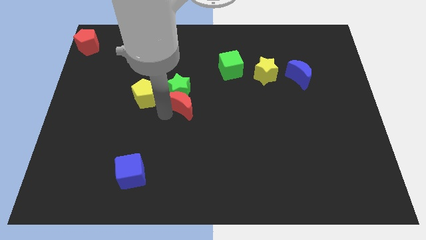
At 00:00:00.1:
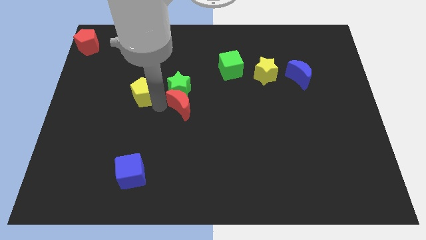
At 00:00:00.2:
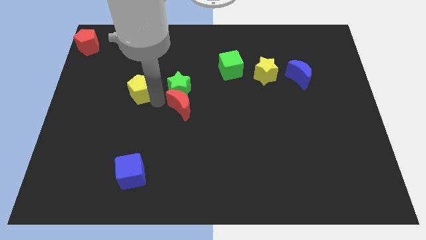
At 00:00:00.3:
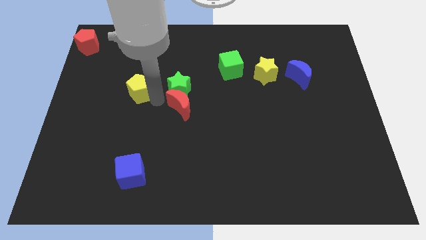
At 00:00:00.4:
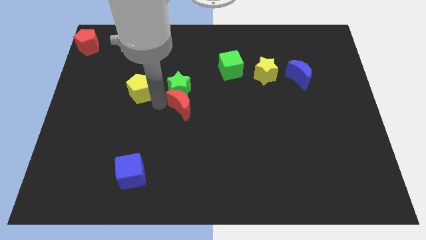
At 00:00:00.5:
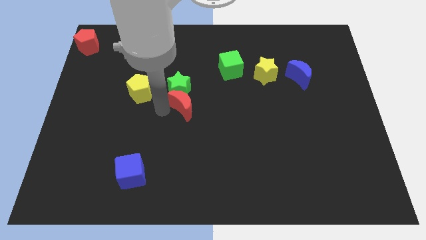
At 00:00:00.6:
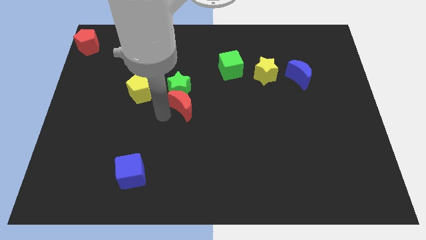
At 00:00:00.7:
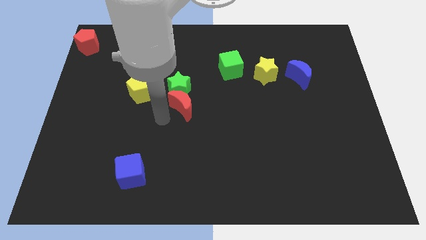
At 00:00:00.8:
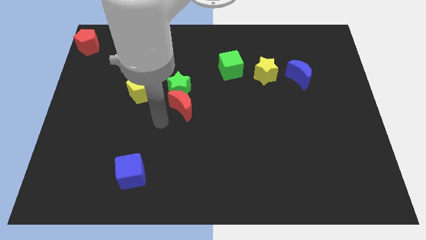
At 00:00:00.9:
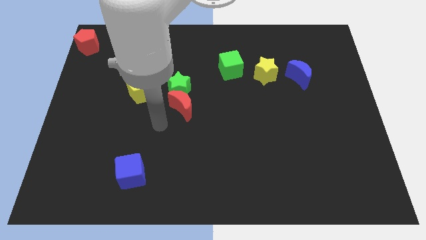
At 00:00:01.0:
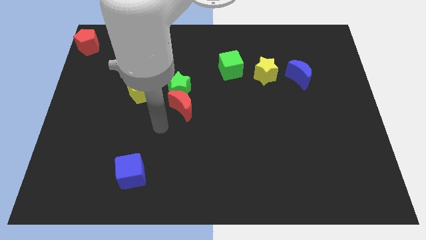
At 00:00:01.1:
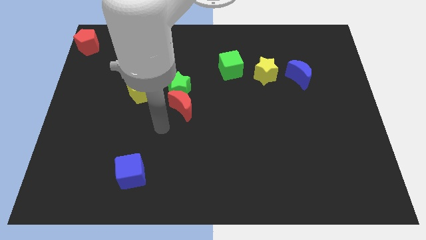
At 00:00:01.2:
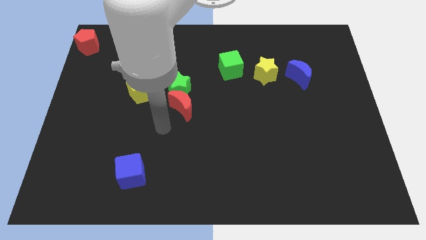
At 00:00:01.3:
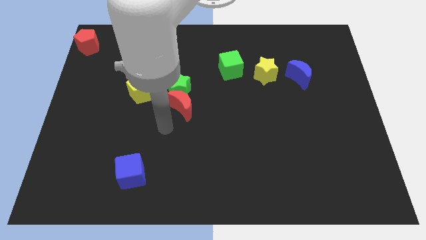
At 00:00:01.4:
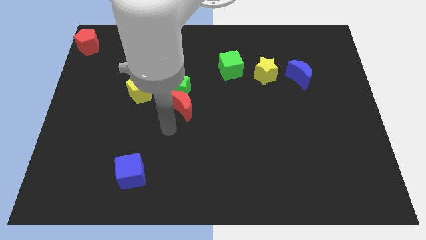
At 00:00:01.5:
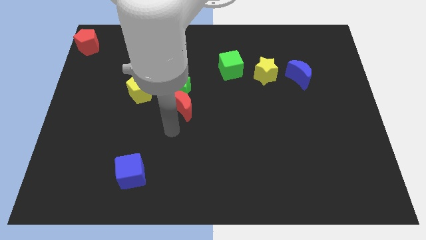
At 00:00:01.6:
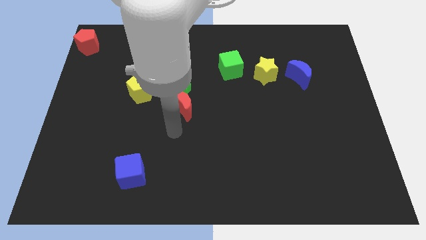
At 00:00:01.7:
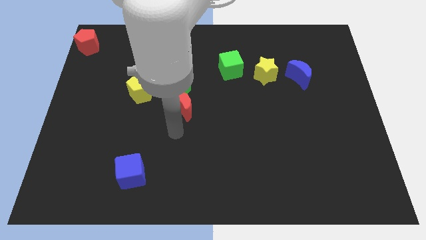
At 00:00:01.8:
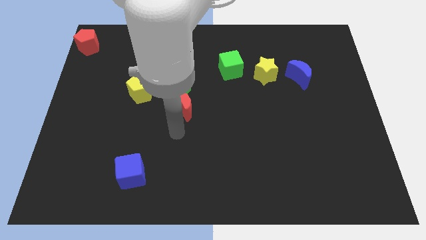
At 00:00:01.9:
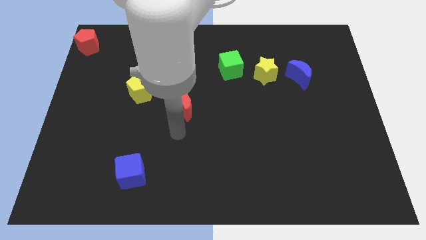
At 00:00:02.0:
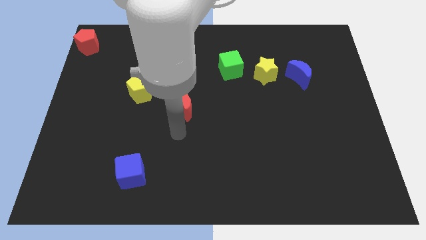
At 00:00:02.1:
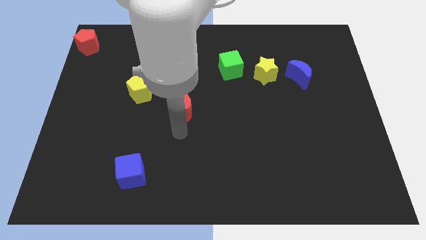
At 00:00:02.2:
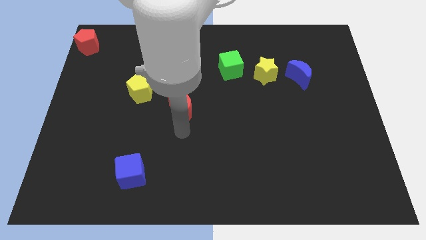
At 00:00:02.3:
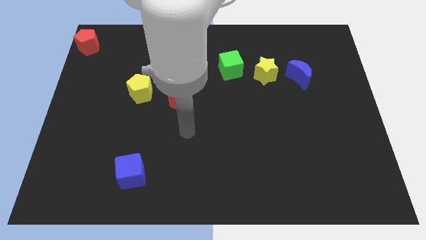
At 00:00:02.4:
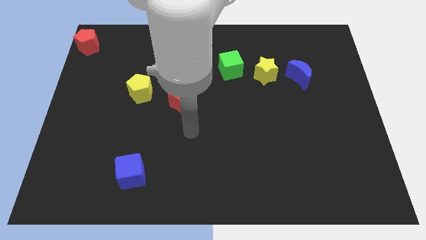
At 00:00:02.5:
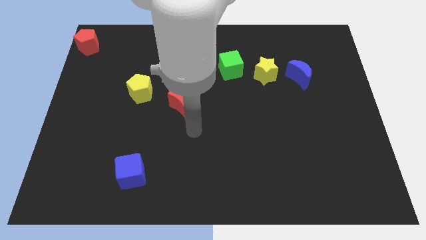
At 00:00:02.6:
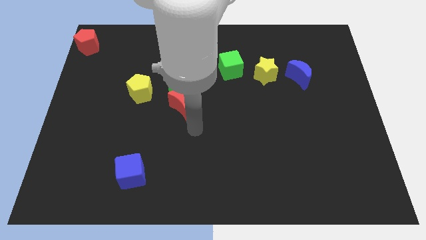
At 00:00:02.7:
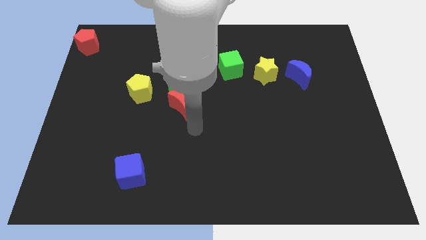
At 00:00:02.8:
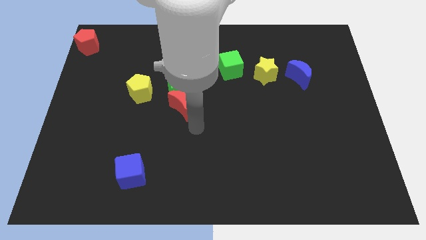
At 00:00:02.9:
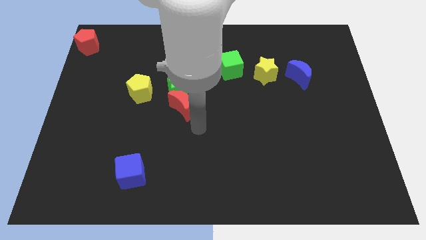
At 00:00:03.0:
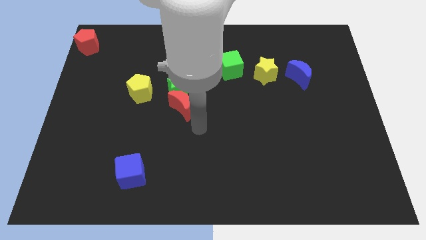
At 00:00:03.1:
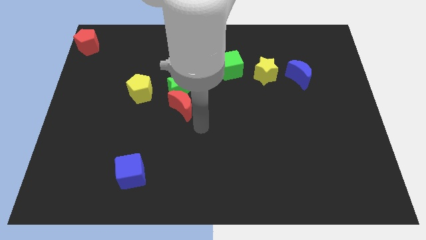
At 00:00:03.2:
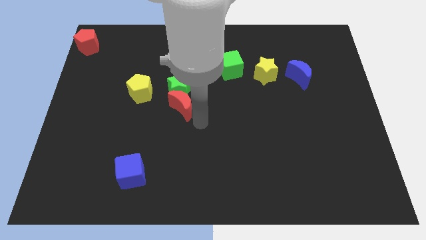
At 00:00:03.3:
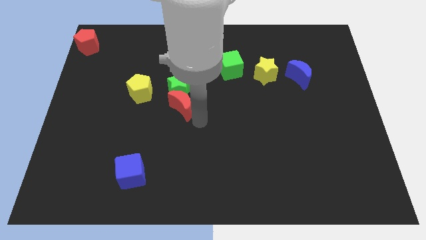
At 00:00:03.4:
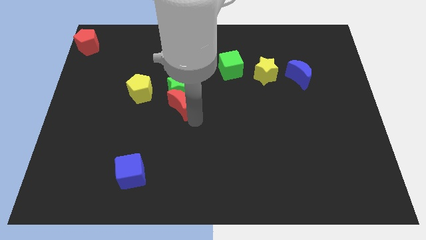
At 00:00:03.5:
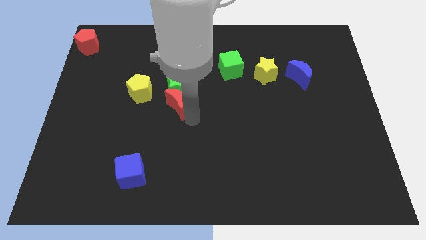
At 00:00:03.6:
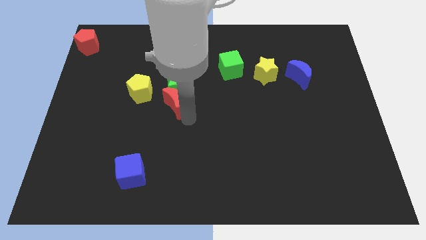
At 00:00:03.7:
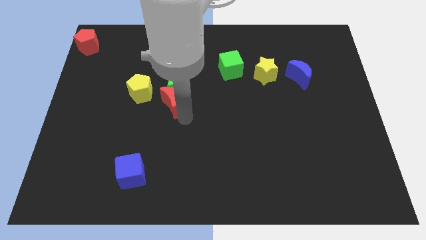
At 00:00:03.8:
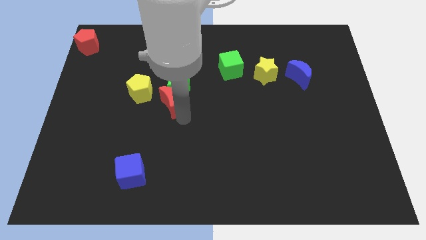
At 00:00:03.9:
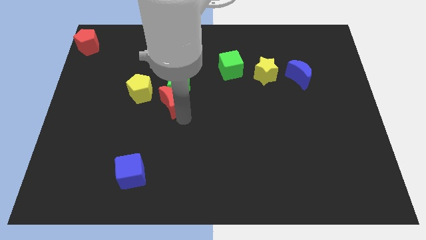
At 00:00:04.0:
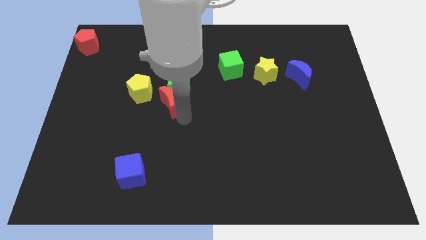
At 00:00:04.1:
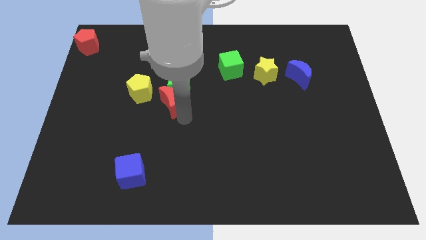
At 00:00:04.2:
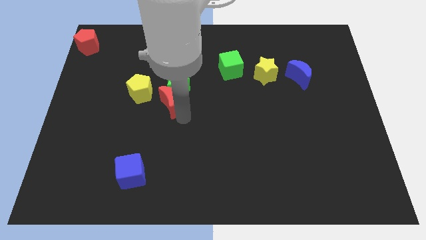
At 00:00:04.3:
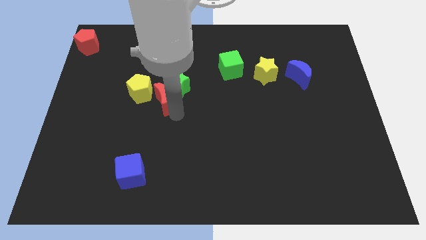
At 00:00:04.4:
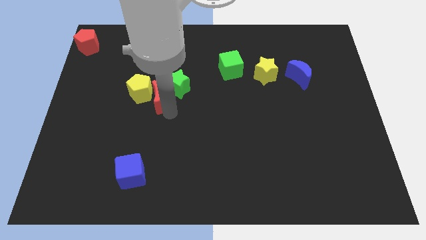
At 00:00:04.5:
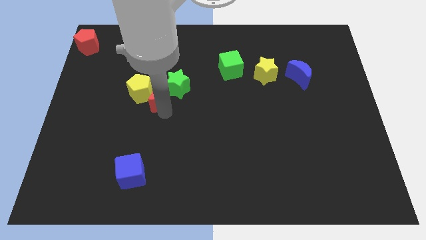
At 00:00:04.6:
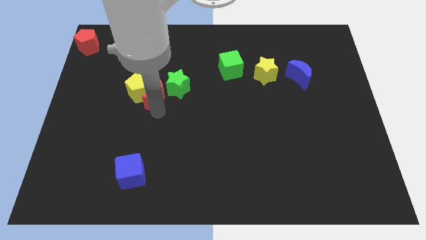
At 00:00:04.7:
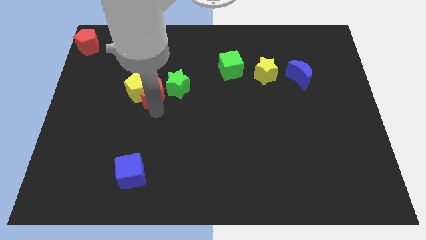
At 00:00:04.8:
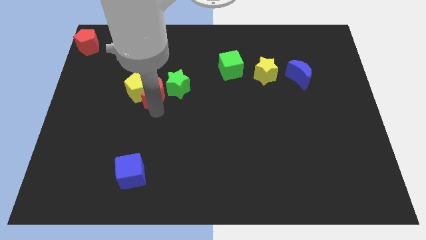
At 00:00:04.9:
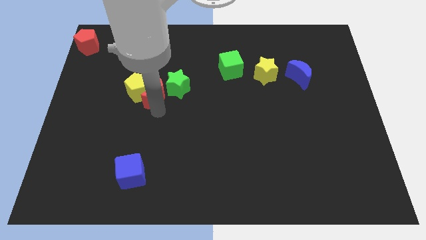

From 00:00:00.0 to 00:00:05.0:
push the red crescent towards the left of the yellow pentagon

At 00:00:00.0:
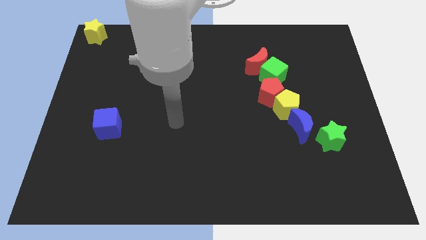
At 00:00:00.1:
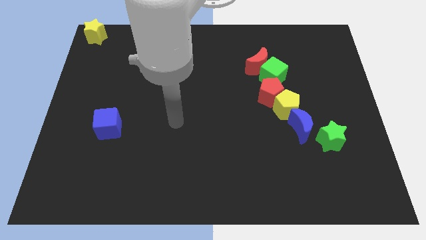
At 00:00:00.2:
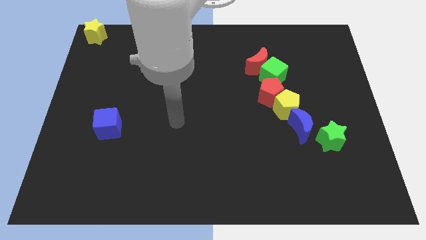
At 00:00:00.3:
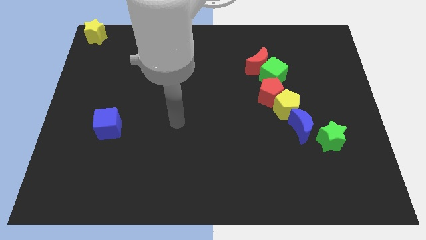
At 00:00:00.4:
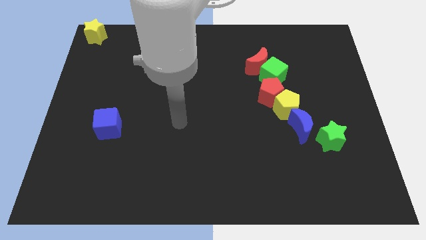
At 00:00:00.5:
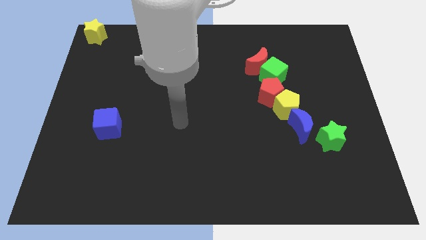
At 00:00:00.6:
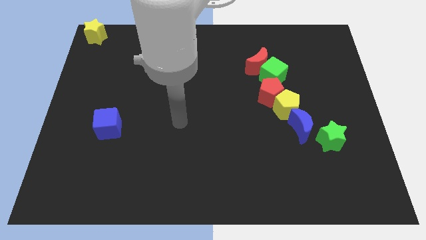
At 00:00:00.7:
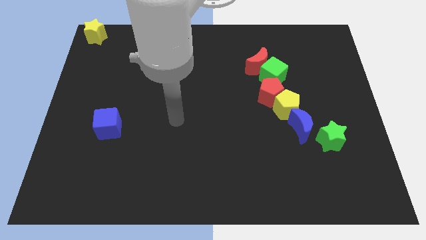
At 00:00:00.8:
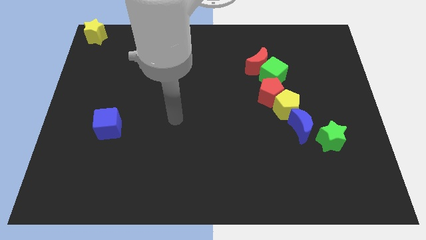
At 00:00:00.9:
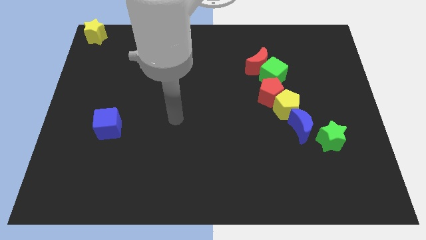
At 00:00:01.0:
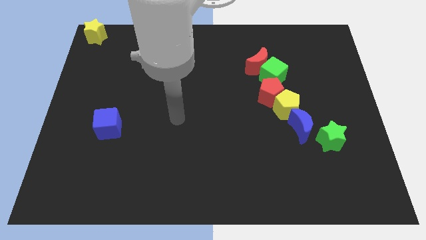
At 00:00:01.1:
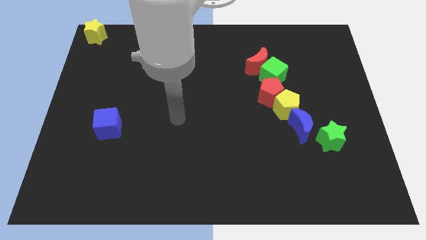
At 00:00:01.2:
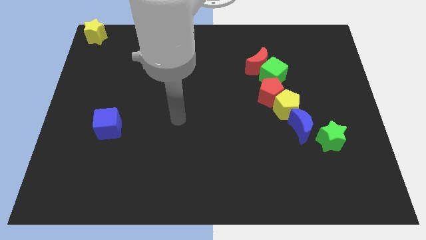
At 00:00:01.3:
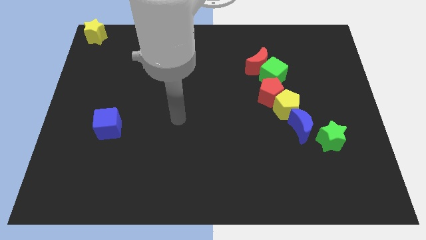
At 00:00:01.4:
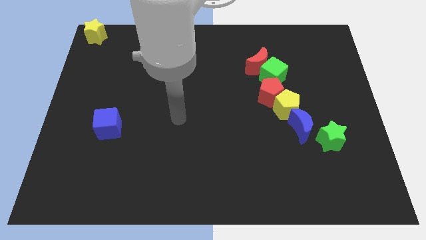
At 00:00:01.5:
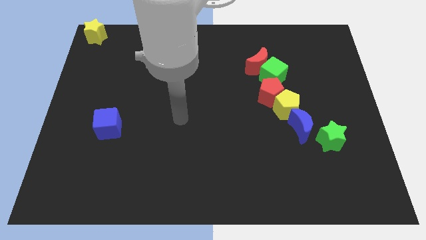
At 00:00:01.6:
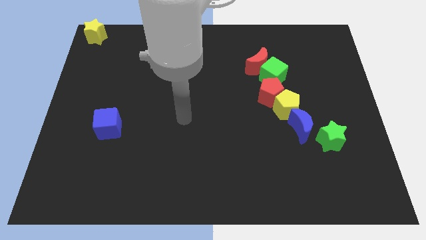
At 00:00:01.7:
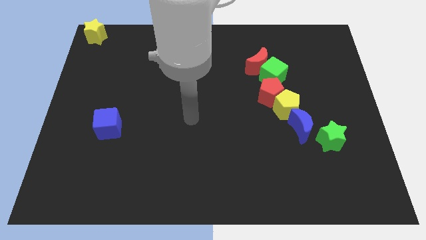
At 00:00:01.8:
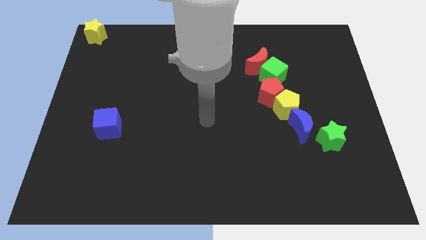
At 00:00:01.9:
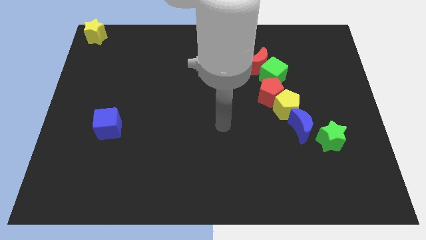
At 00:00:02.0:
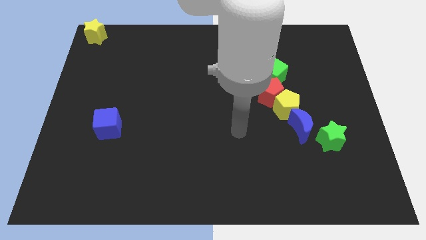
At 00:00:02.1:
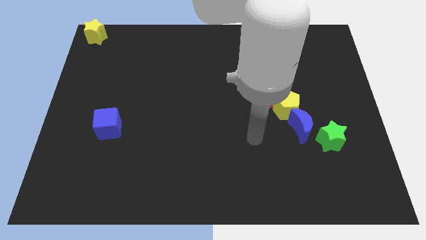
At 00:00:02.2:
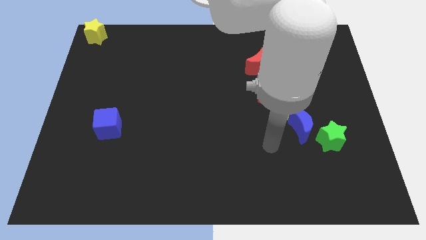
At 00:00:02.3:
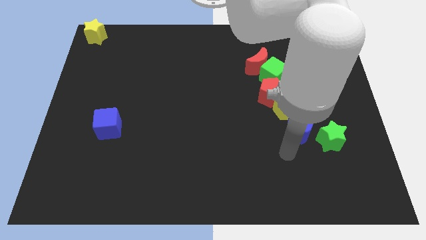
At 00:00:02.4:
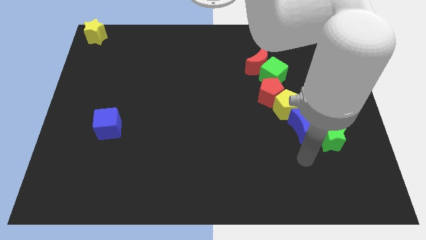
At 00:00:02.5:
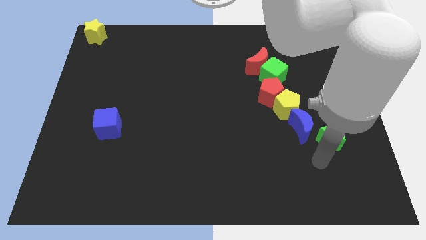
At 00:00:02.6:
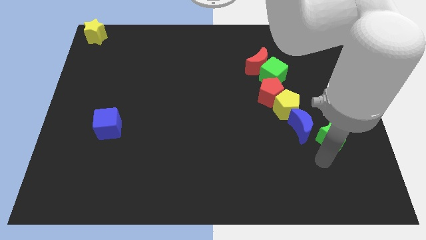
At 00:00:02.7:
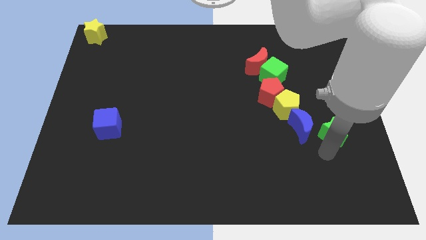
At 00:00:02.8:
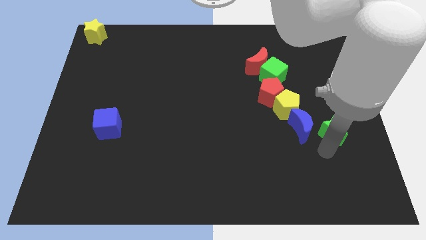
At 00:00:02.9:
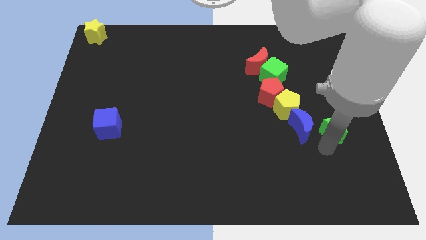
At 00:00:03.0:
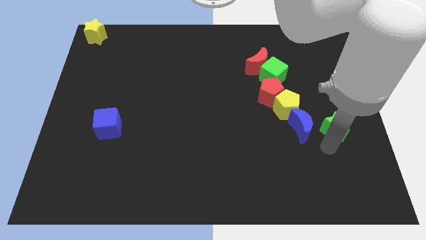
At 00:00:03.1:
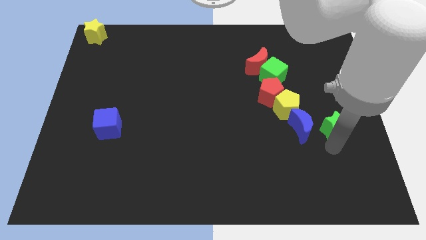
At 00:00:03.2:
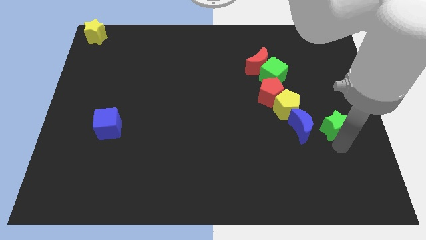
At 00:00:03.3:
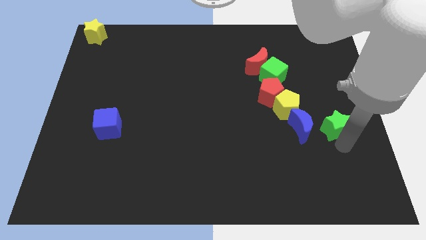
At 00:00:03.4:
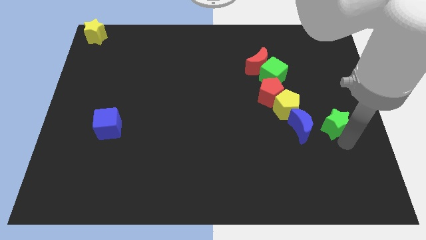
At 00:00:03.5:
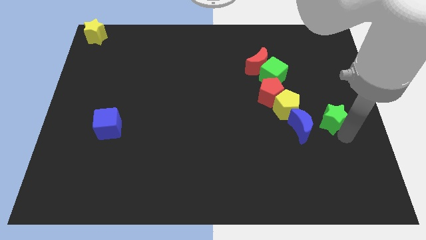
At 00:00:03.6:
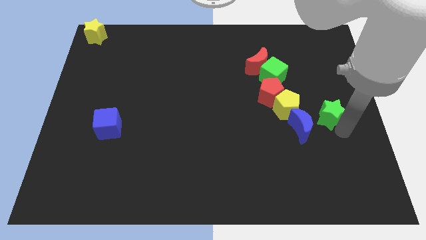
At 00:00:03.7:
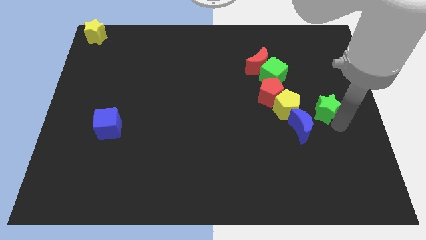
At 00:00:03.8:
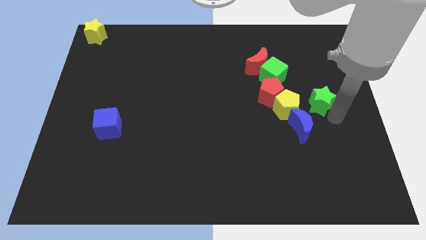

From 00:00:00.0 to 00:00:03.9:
place the green star to the right of the yellow pentagon
